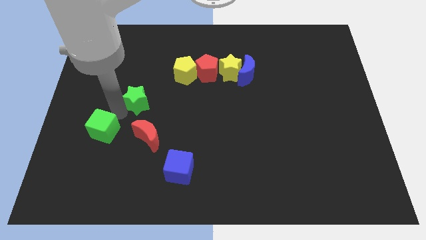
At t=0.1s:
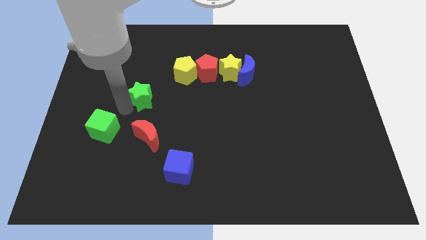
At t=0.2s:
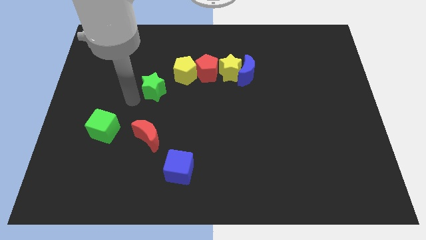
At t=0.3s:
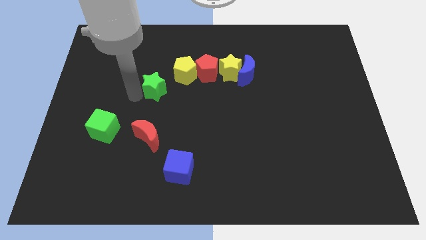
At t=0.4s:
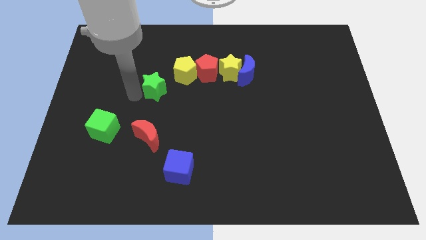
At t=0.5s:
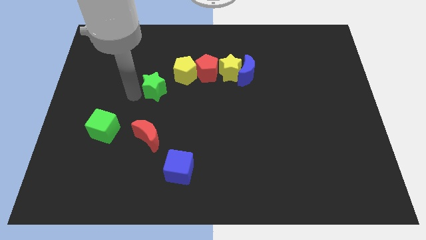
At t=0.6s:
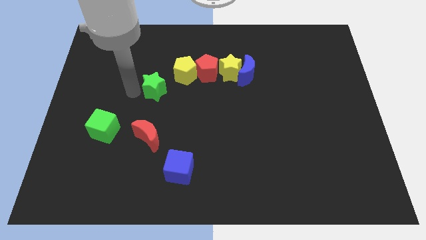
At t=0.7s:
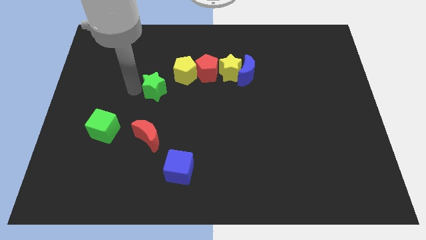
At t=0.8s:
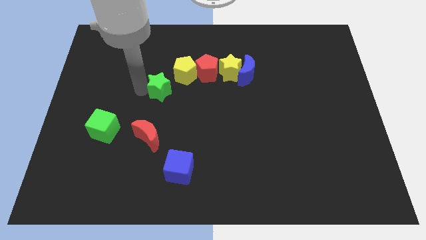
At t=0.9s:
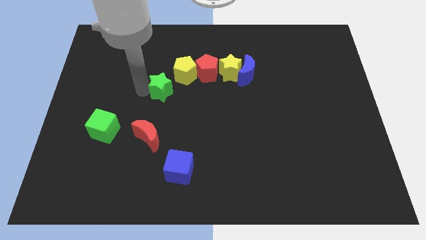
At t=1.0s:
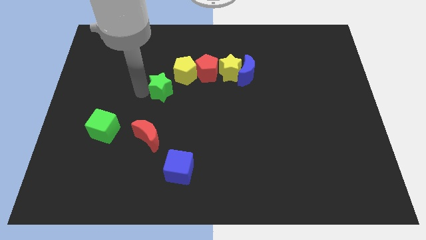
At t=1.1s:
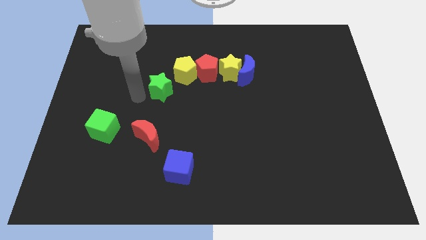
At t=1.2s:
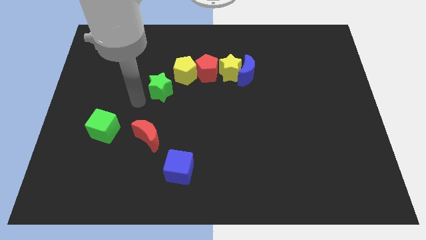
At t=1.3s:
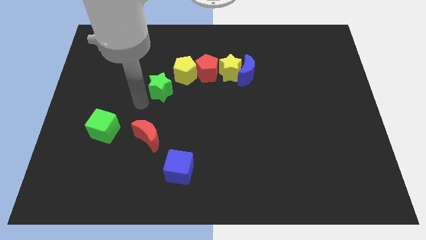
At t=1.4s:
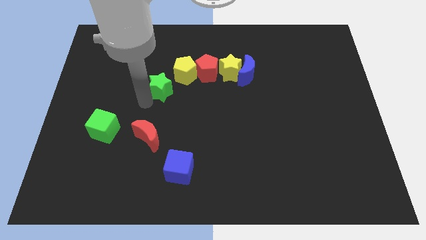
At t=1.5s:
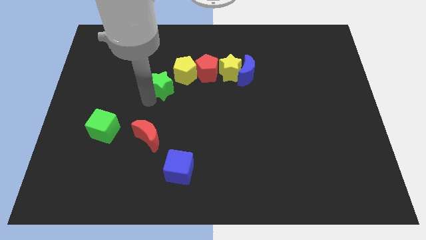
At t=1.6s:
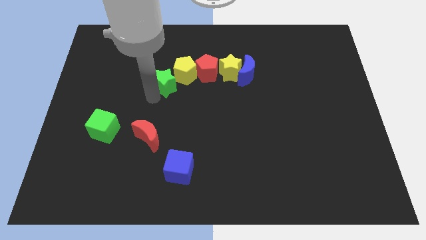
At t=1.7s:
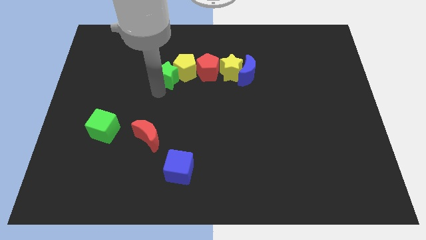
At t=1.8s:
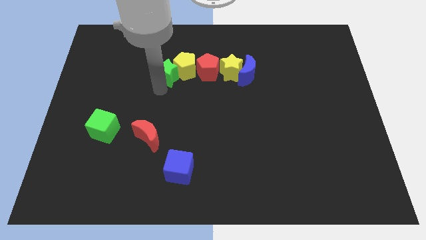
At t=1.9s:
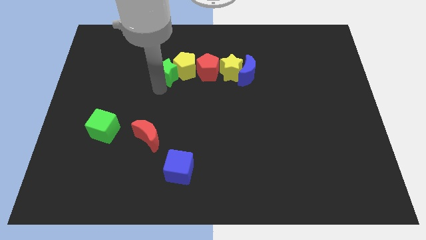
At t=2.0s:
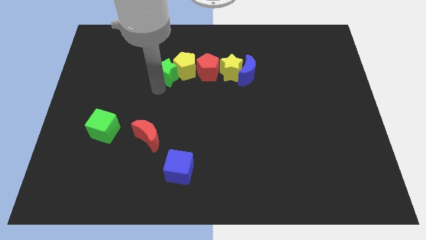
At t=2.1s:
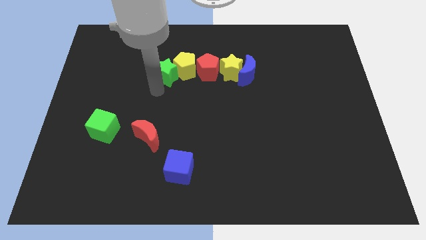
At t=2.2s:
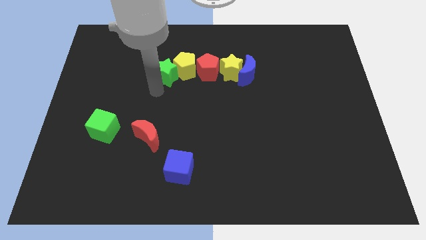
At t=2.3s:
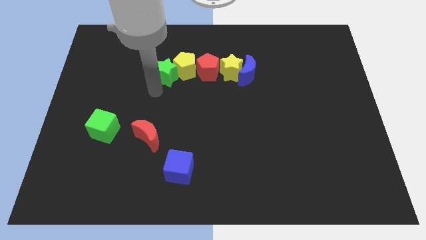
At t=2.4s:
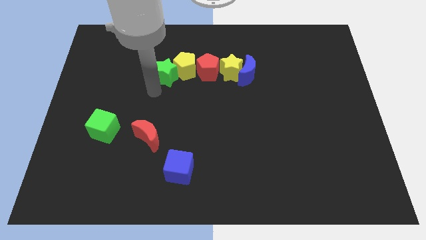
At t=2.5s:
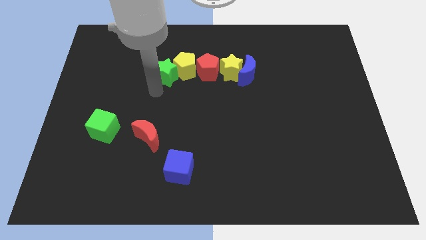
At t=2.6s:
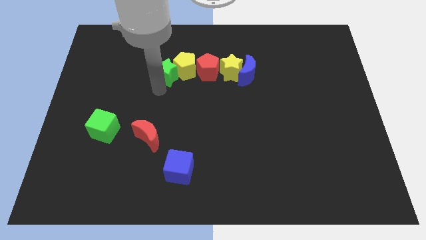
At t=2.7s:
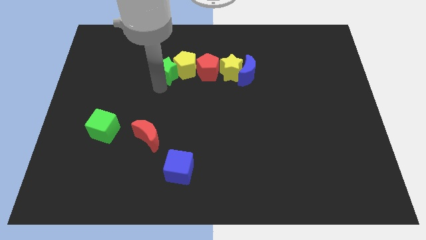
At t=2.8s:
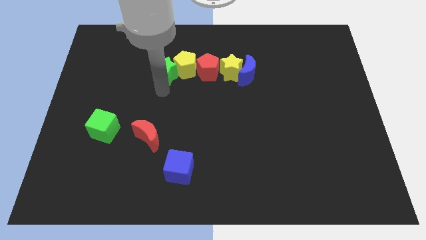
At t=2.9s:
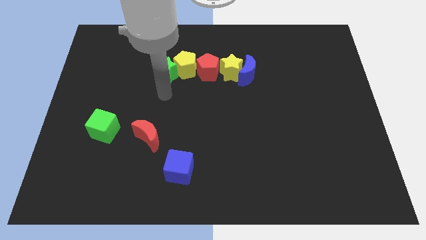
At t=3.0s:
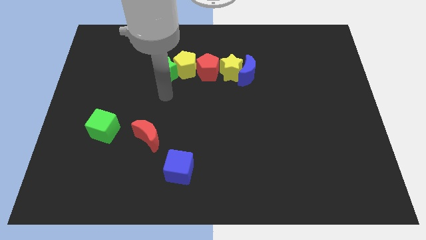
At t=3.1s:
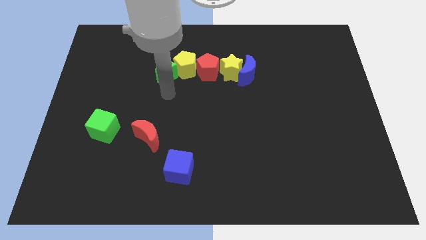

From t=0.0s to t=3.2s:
place the green star to the left of yellow pentagon

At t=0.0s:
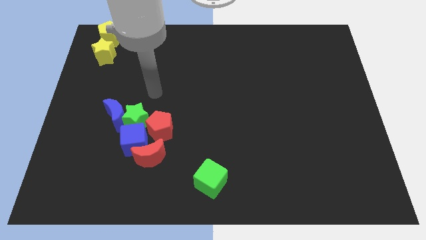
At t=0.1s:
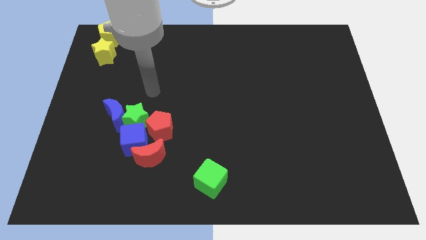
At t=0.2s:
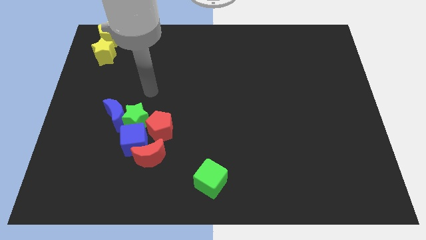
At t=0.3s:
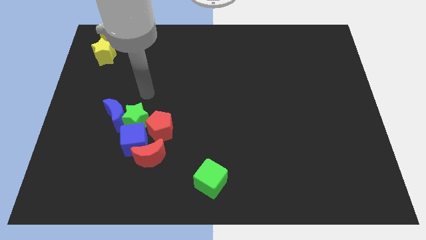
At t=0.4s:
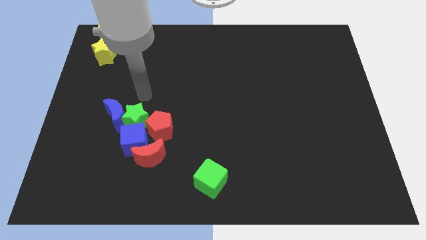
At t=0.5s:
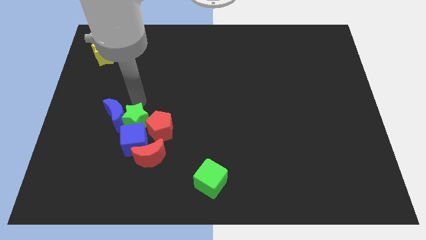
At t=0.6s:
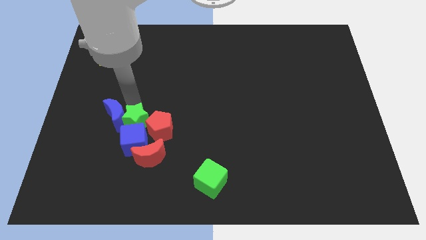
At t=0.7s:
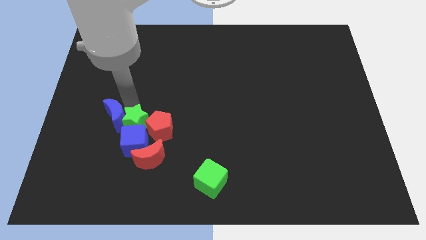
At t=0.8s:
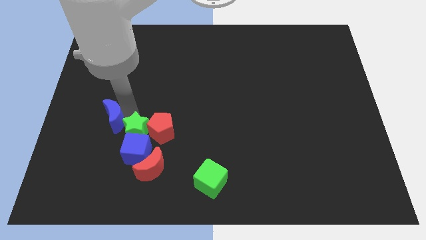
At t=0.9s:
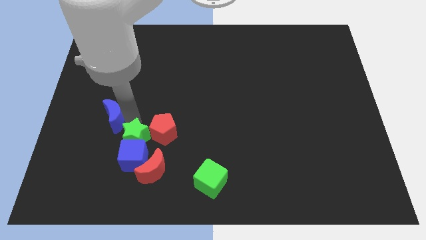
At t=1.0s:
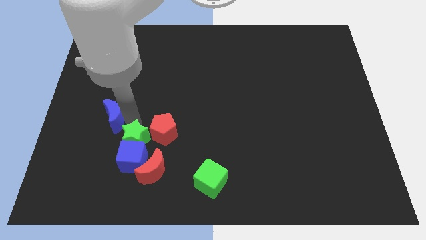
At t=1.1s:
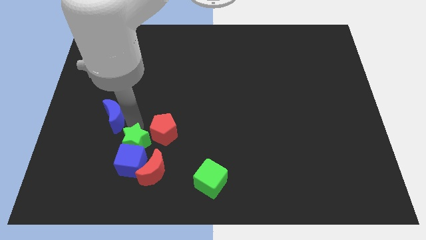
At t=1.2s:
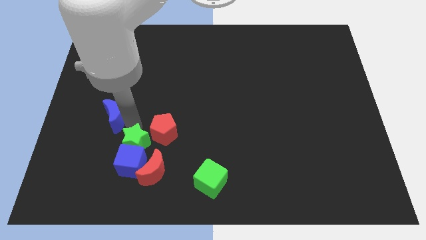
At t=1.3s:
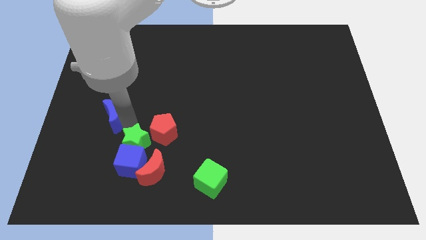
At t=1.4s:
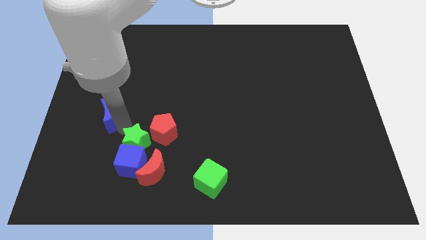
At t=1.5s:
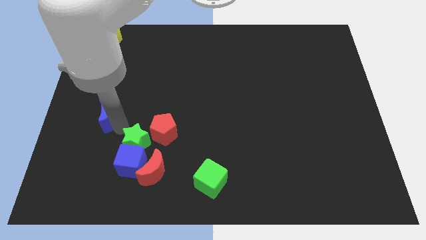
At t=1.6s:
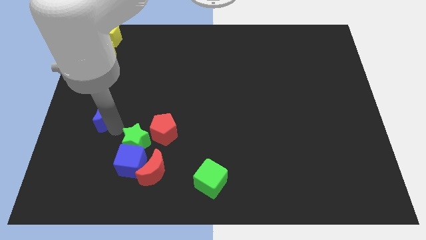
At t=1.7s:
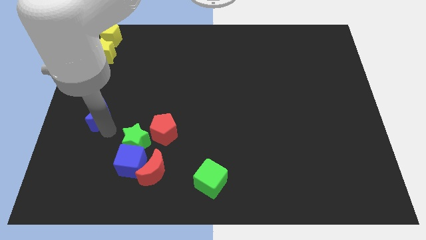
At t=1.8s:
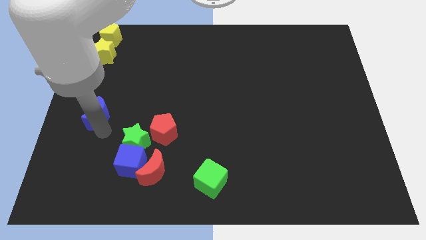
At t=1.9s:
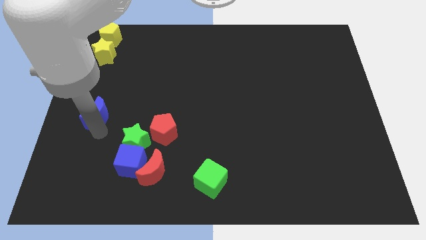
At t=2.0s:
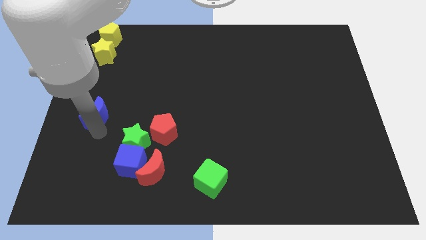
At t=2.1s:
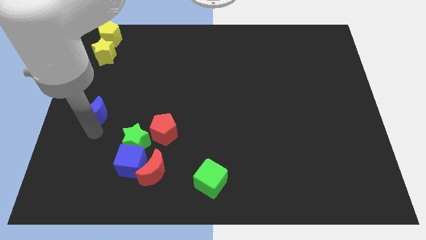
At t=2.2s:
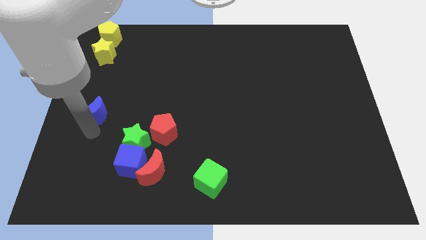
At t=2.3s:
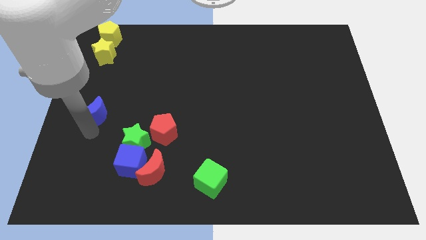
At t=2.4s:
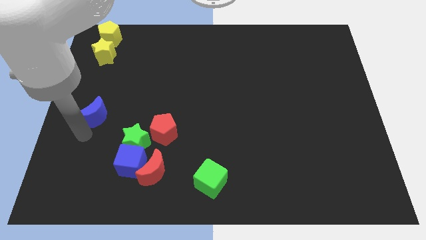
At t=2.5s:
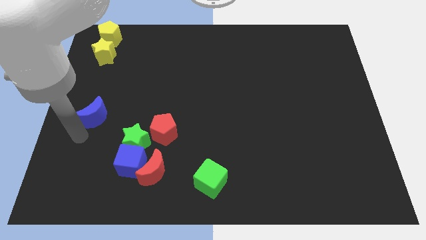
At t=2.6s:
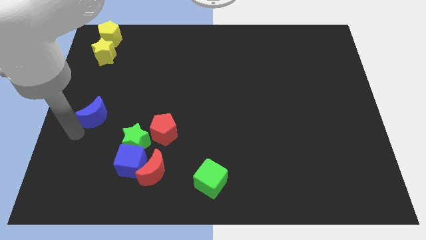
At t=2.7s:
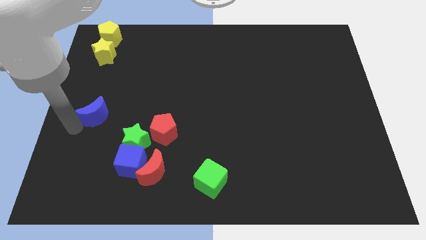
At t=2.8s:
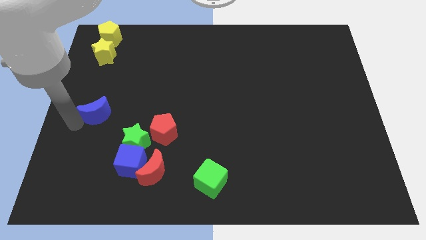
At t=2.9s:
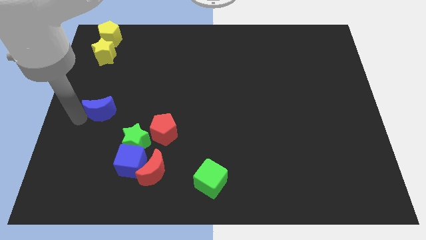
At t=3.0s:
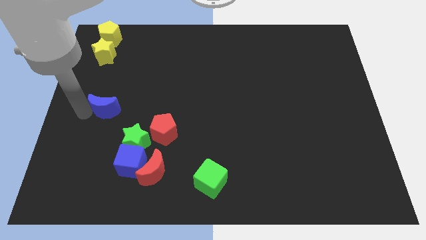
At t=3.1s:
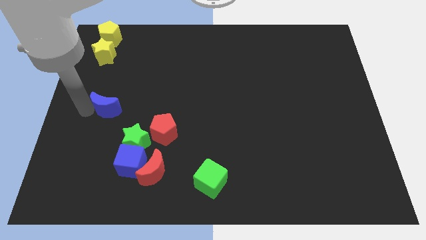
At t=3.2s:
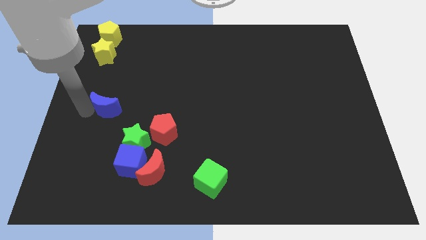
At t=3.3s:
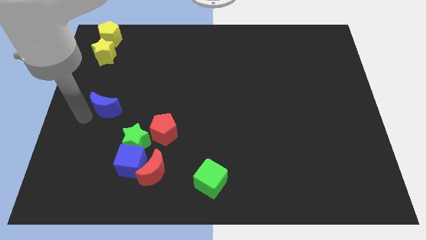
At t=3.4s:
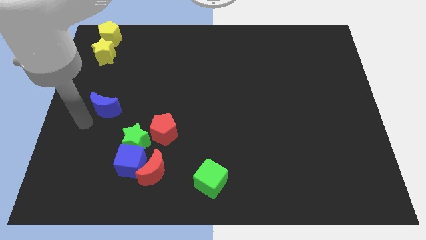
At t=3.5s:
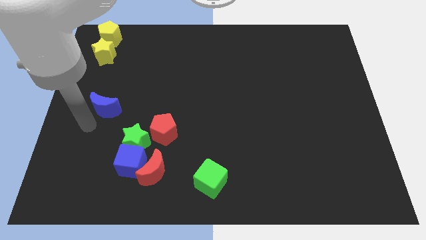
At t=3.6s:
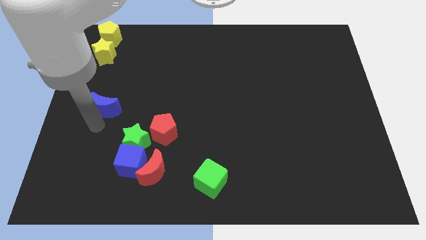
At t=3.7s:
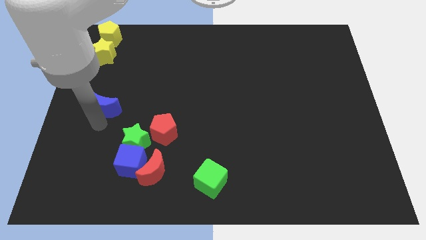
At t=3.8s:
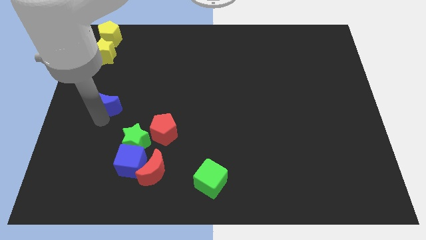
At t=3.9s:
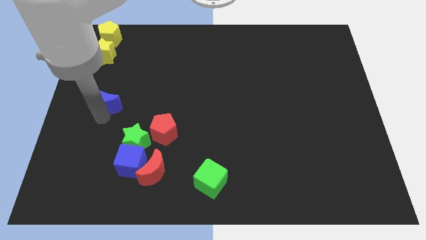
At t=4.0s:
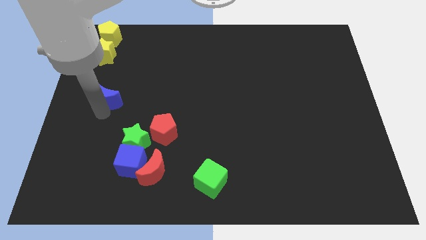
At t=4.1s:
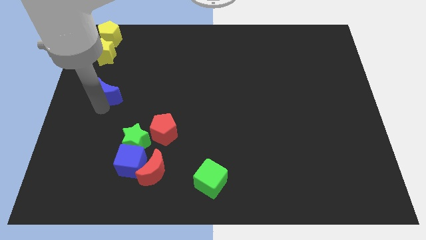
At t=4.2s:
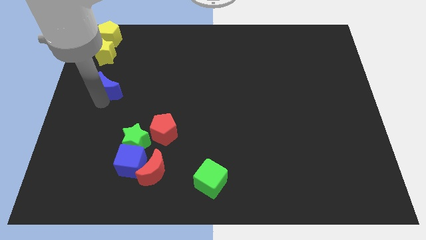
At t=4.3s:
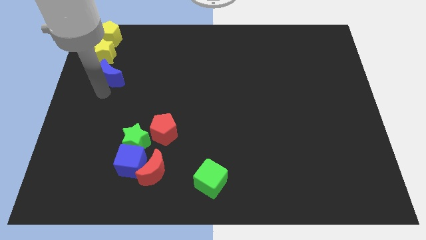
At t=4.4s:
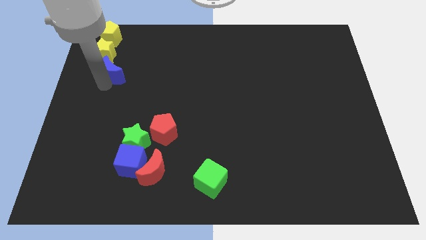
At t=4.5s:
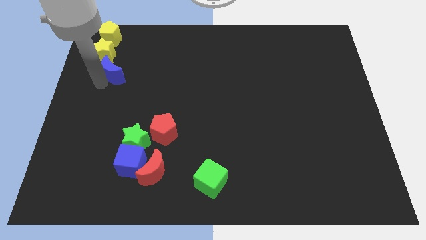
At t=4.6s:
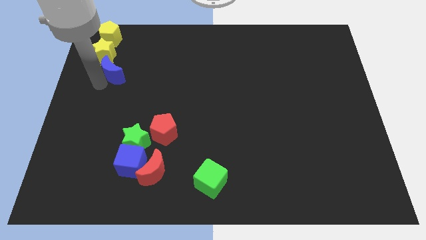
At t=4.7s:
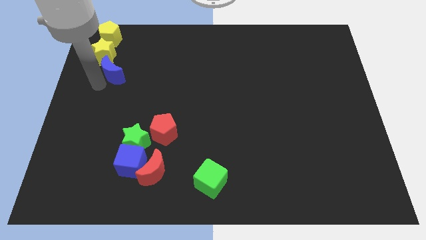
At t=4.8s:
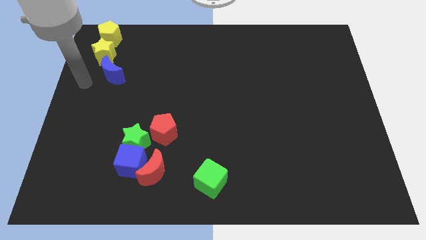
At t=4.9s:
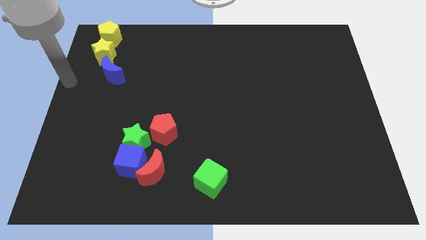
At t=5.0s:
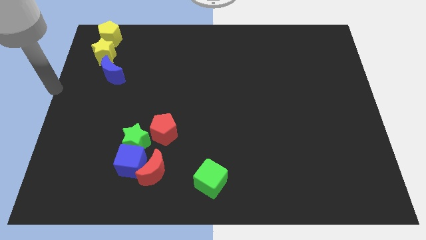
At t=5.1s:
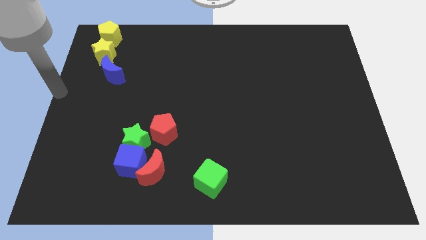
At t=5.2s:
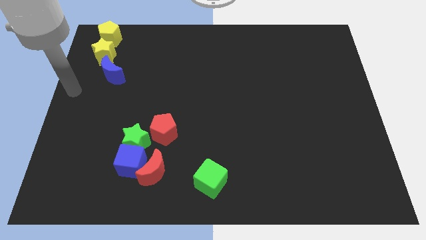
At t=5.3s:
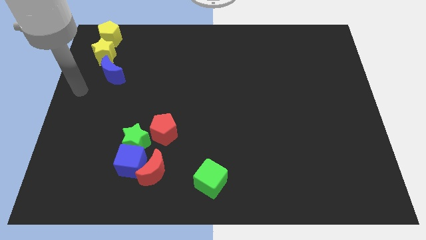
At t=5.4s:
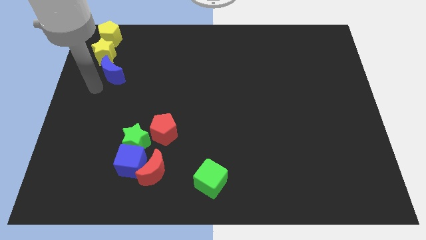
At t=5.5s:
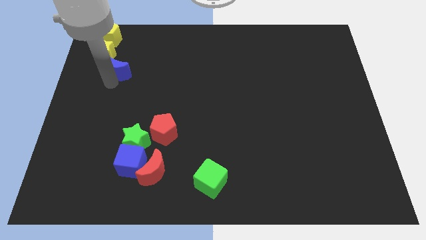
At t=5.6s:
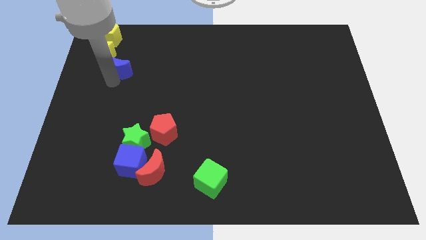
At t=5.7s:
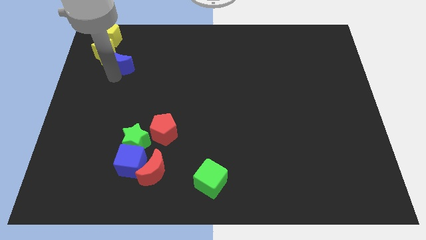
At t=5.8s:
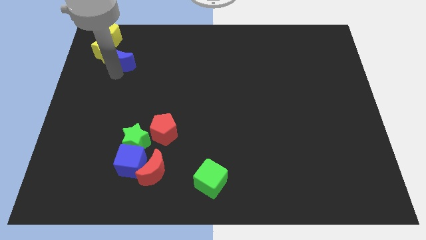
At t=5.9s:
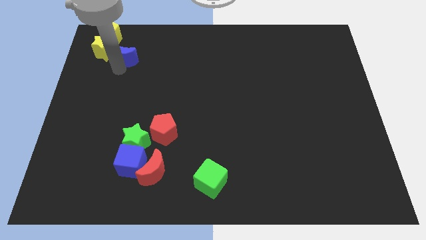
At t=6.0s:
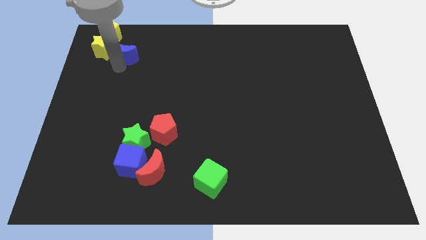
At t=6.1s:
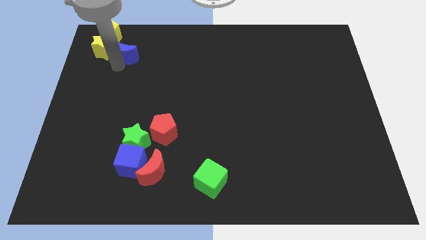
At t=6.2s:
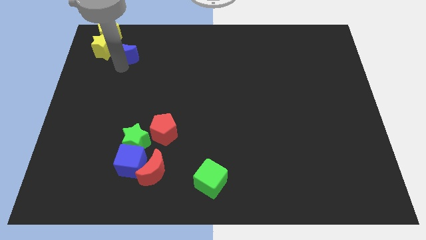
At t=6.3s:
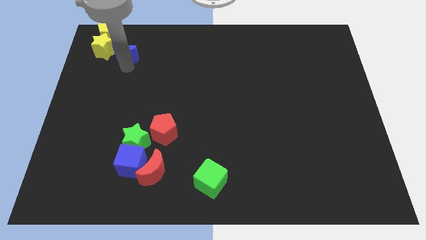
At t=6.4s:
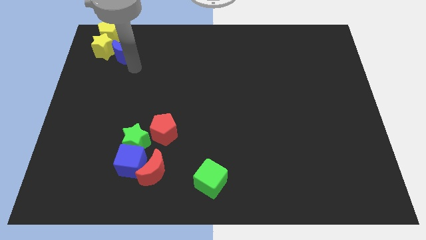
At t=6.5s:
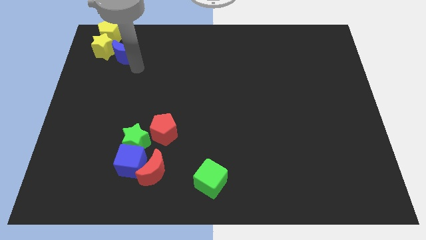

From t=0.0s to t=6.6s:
place the blue moon to the right of the yellow star
